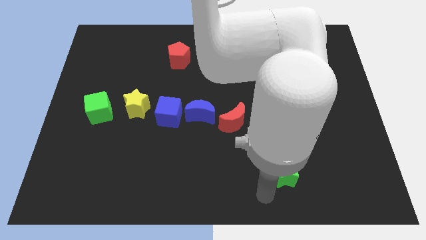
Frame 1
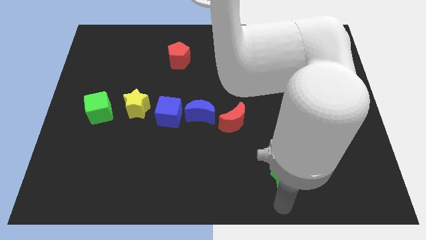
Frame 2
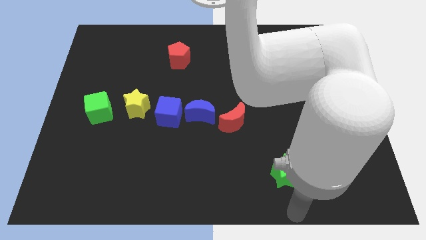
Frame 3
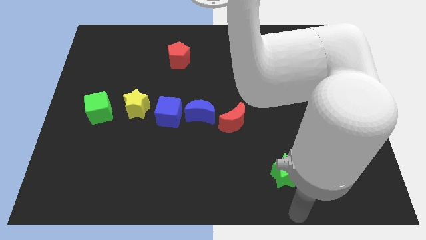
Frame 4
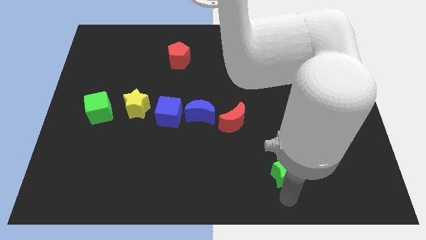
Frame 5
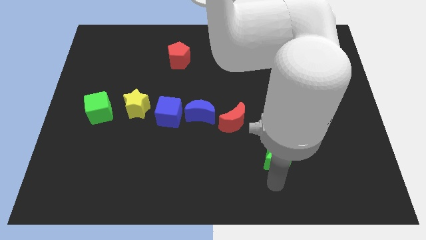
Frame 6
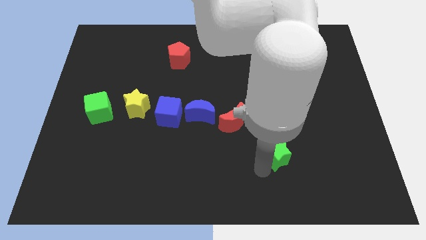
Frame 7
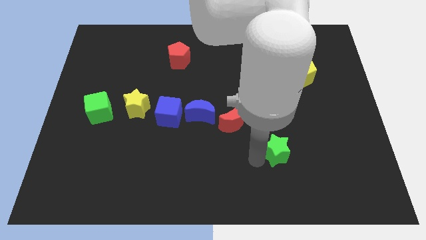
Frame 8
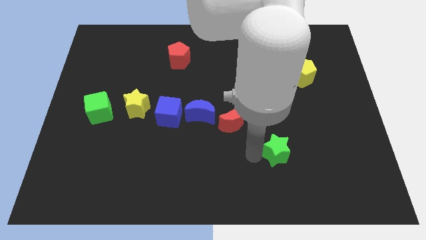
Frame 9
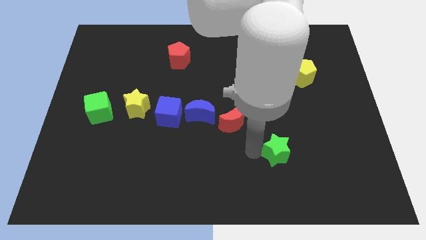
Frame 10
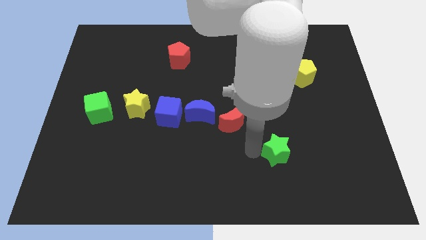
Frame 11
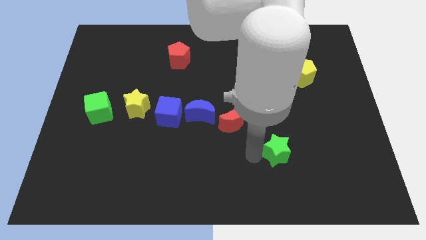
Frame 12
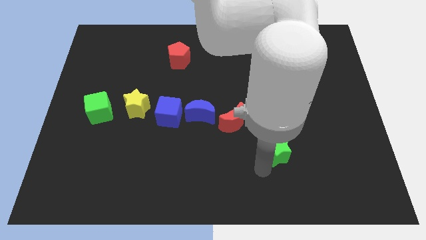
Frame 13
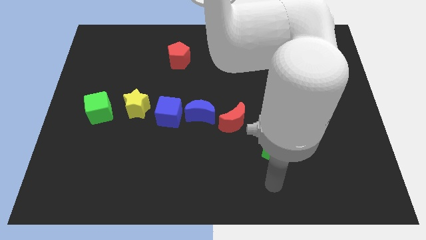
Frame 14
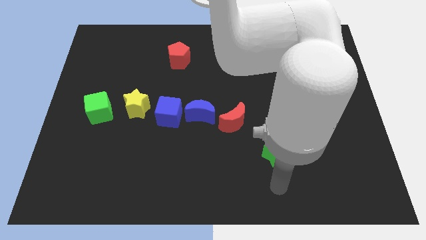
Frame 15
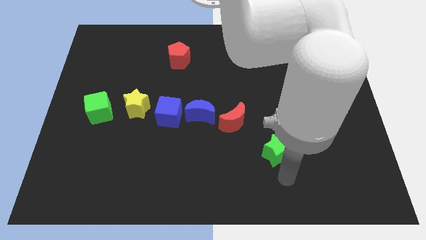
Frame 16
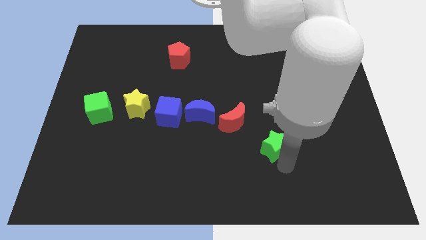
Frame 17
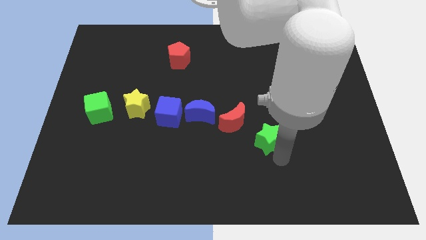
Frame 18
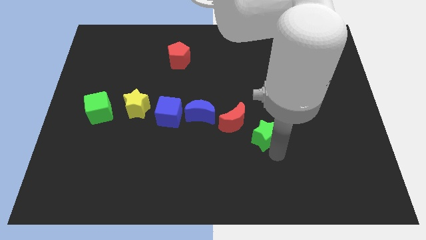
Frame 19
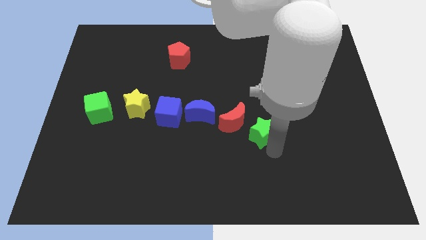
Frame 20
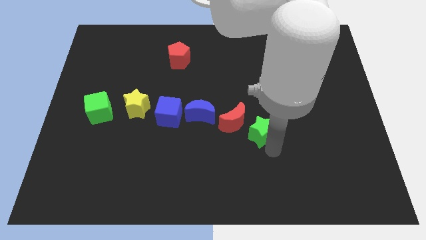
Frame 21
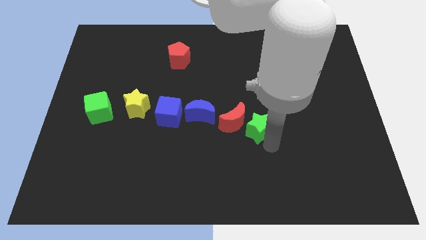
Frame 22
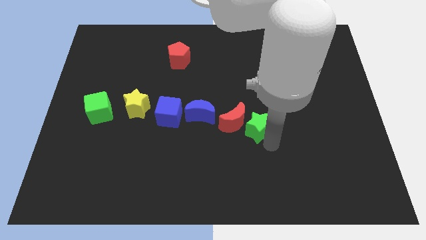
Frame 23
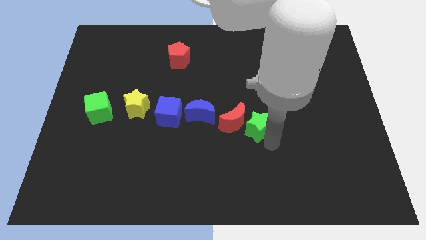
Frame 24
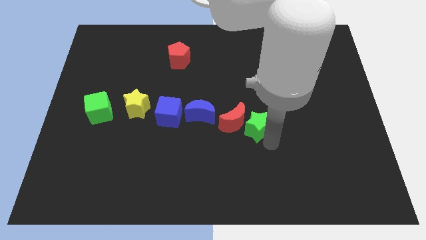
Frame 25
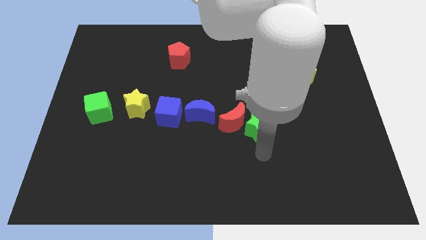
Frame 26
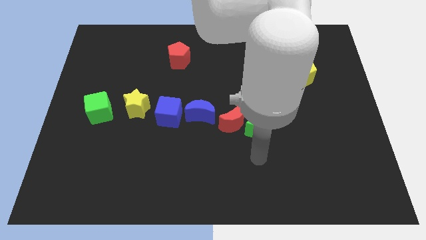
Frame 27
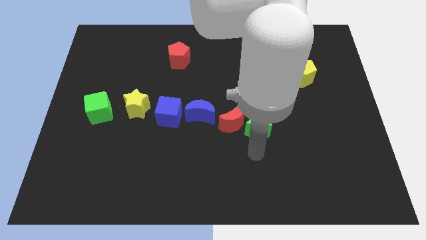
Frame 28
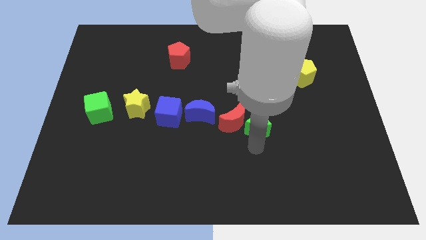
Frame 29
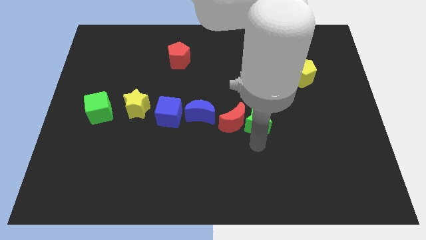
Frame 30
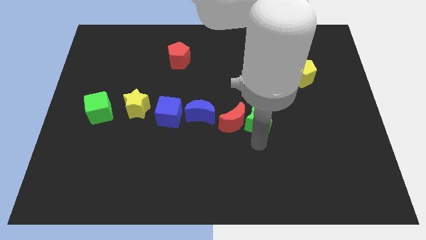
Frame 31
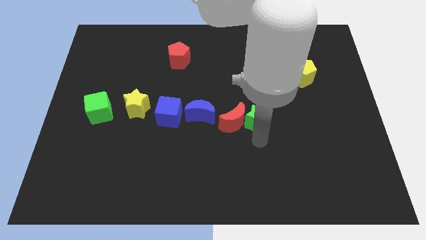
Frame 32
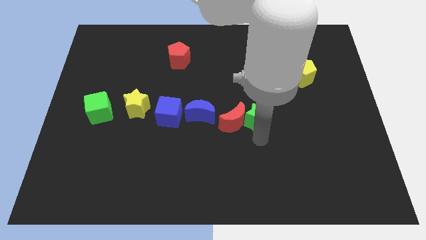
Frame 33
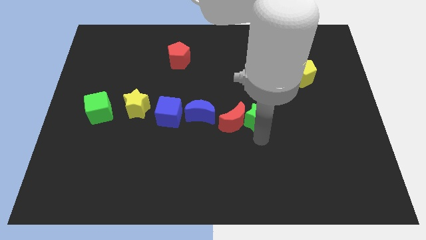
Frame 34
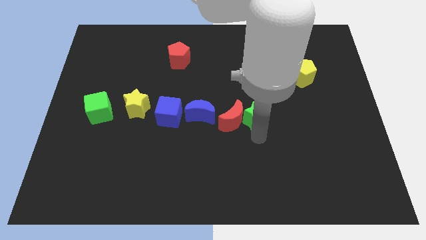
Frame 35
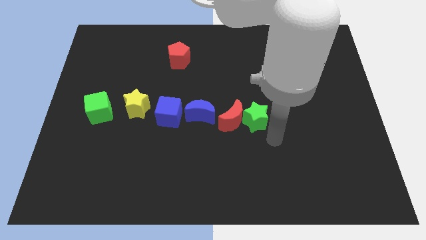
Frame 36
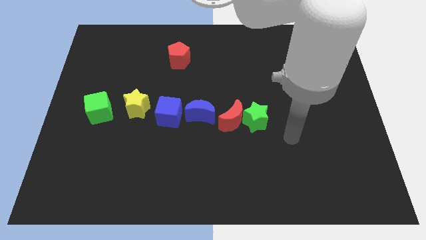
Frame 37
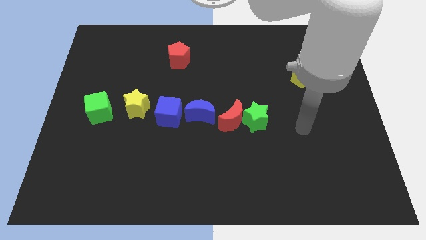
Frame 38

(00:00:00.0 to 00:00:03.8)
move green star into the right of red crescent

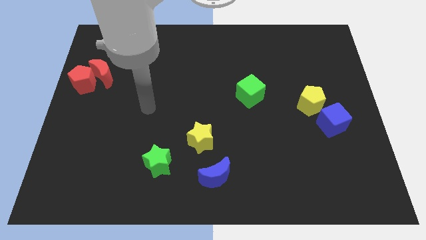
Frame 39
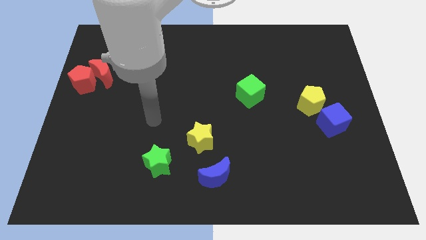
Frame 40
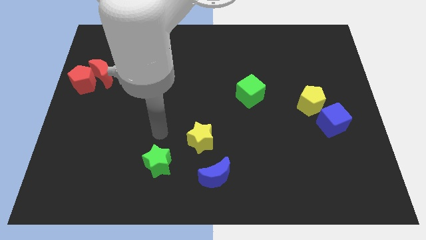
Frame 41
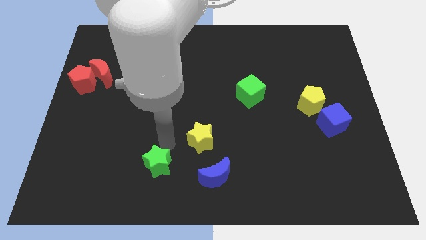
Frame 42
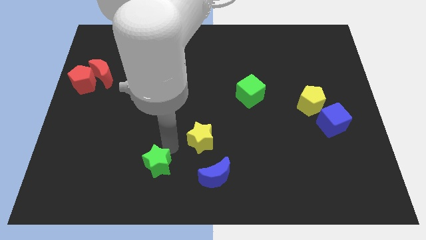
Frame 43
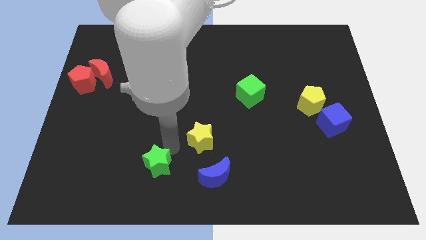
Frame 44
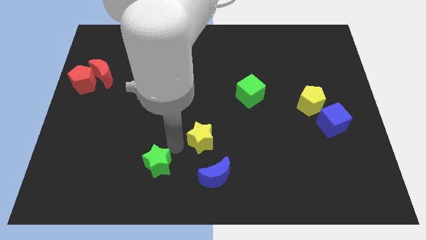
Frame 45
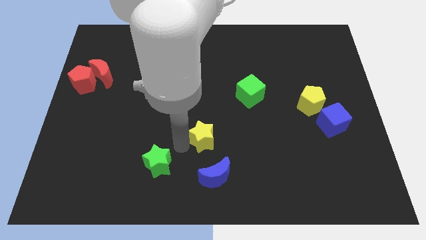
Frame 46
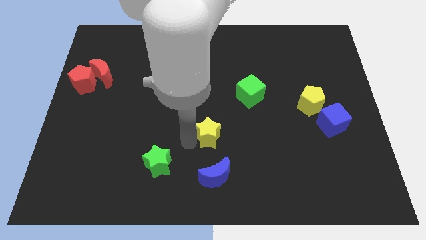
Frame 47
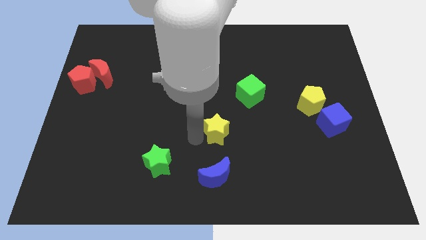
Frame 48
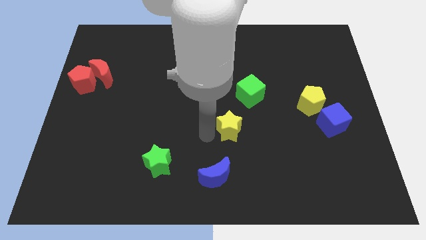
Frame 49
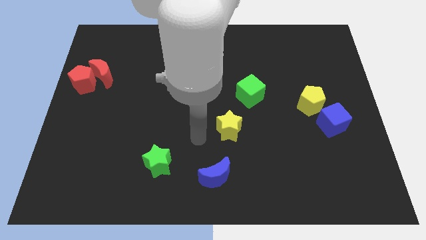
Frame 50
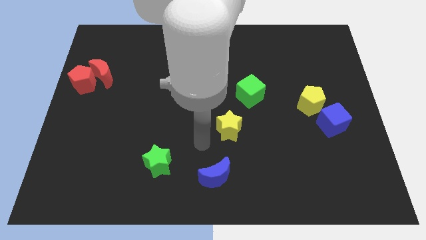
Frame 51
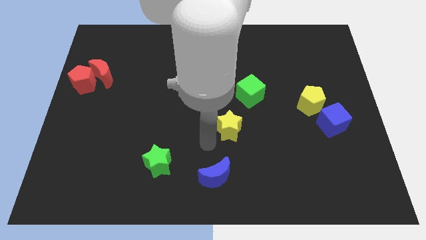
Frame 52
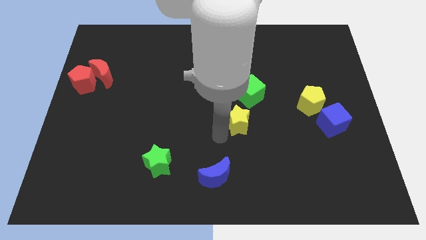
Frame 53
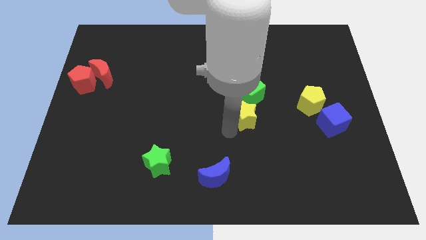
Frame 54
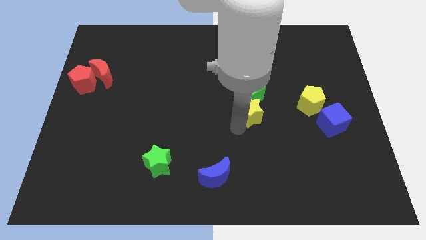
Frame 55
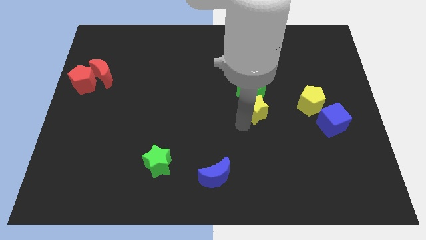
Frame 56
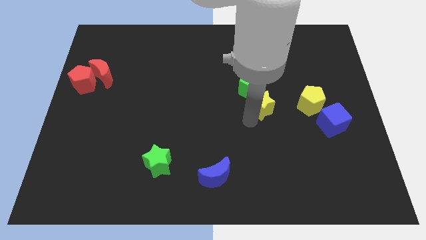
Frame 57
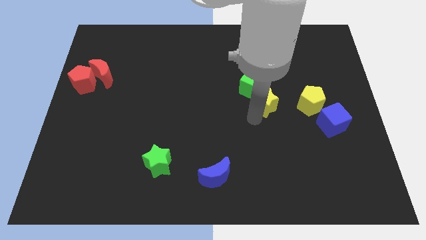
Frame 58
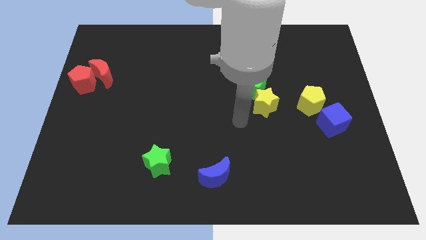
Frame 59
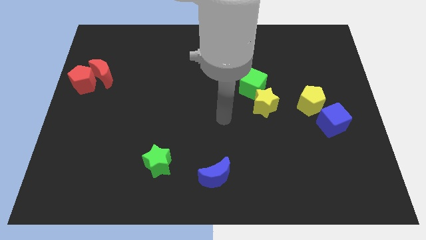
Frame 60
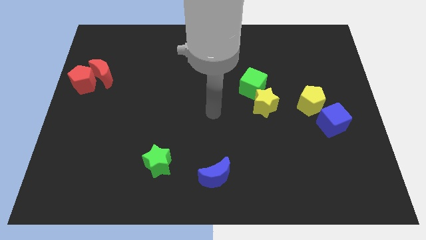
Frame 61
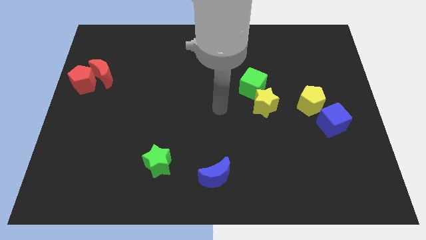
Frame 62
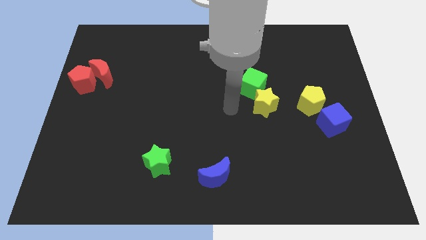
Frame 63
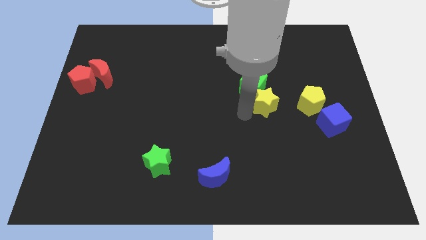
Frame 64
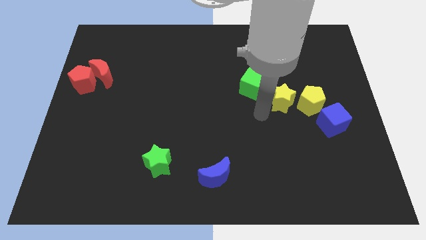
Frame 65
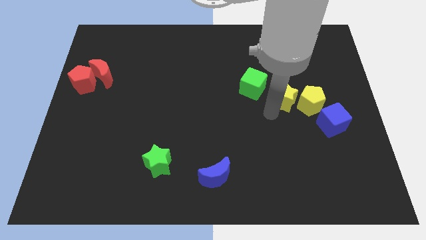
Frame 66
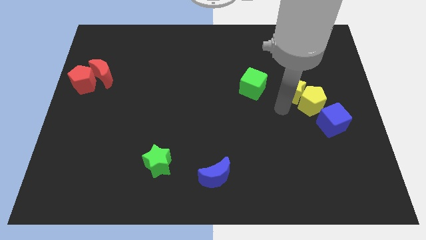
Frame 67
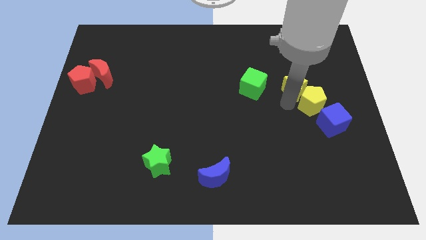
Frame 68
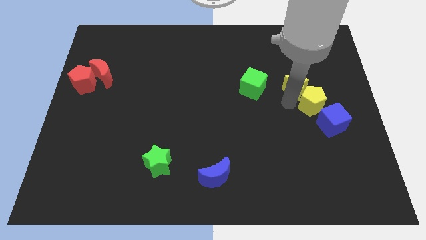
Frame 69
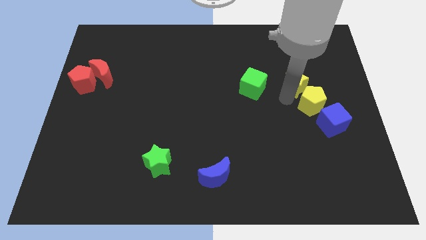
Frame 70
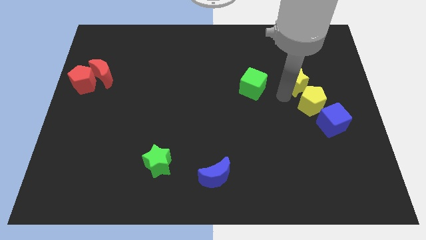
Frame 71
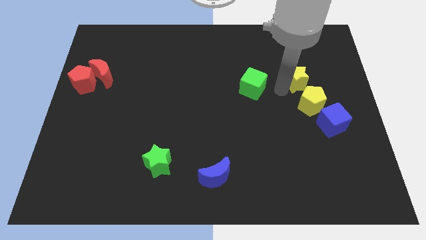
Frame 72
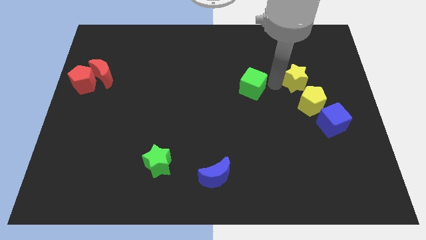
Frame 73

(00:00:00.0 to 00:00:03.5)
place the yellow star to the right of the green cube

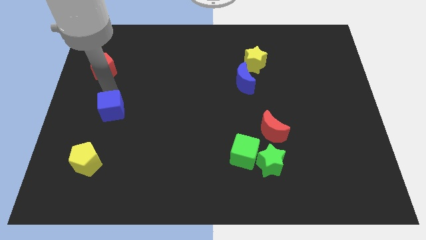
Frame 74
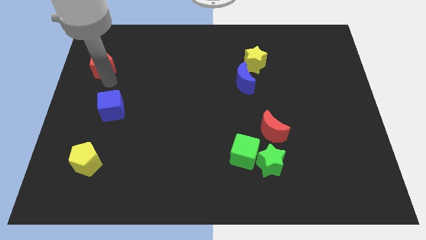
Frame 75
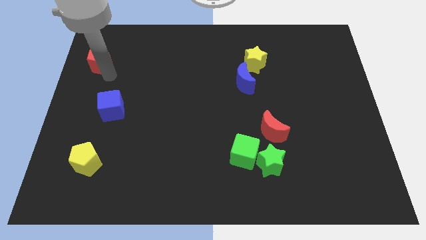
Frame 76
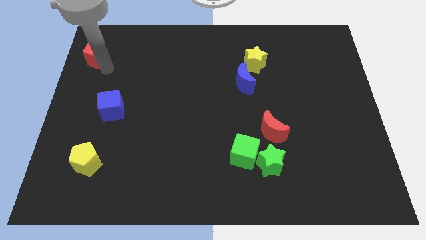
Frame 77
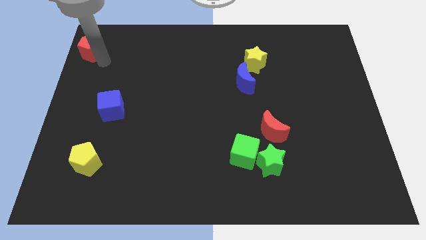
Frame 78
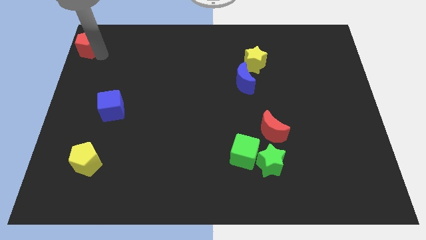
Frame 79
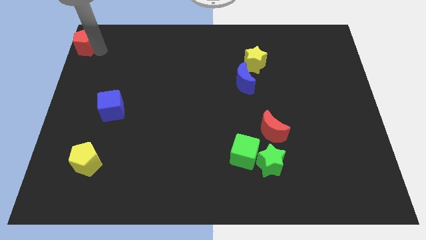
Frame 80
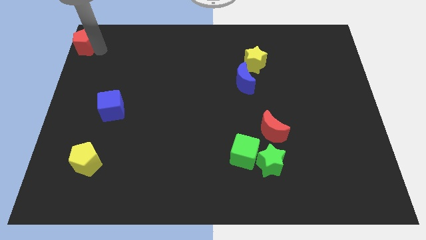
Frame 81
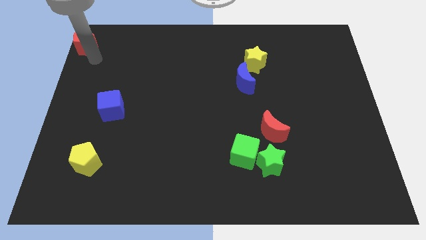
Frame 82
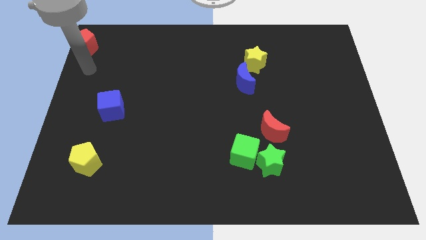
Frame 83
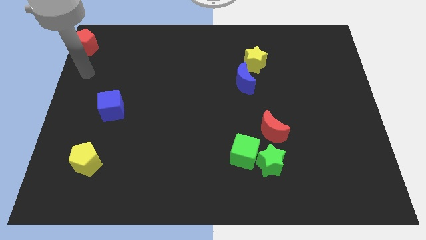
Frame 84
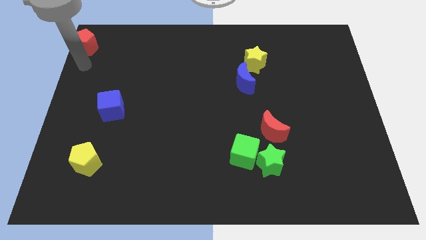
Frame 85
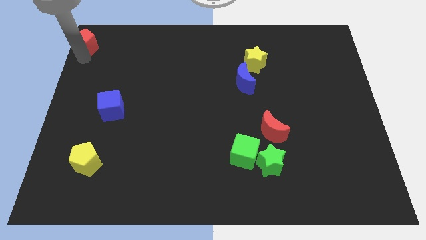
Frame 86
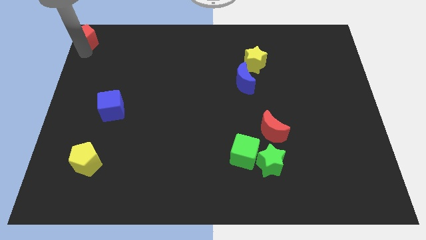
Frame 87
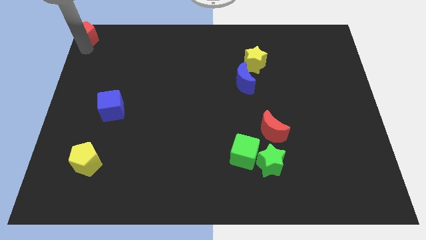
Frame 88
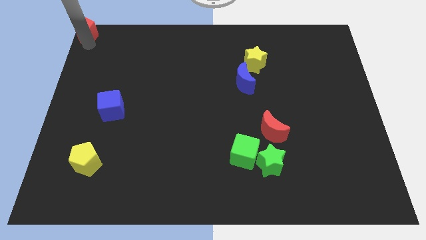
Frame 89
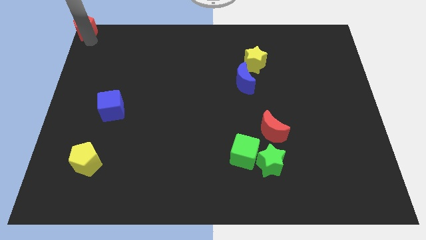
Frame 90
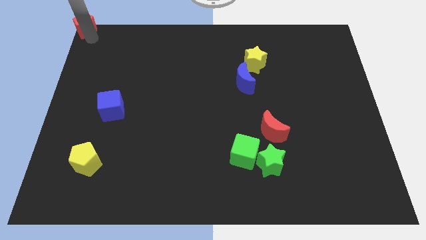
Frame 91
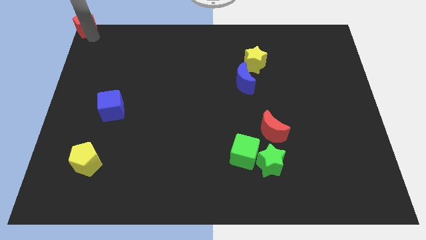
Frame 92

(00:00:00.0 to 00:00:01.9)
move the red pentagon top left of the board
